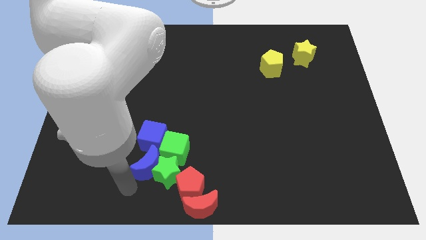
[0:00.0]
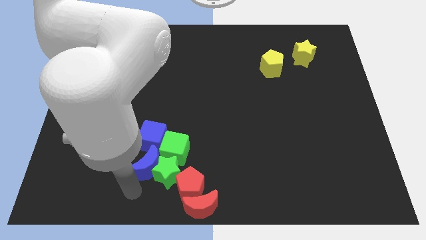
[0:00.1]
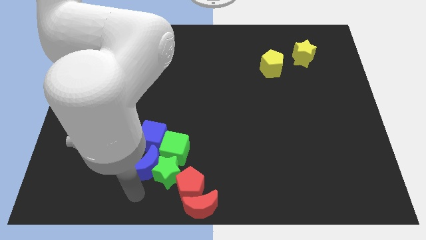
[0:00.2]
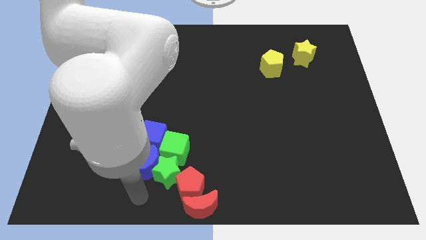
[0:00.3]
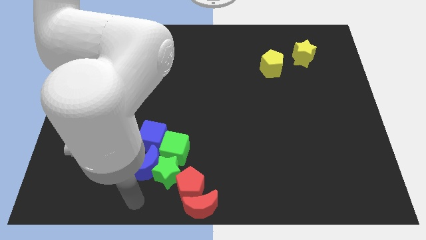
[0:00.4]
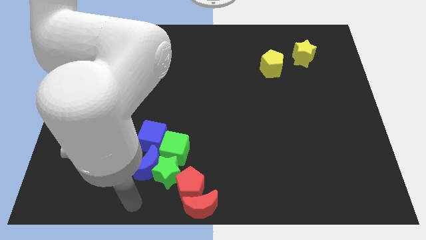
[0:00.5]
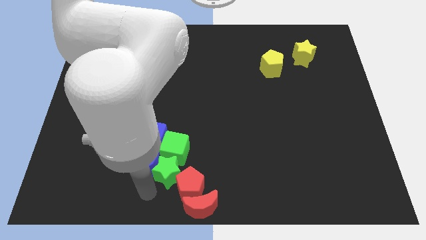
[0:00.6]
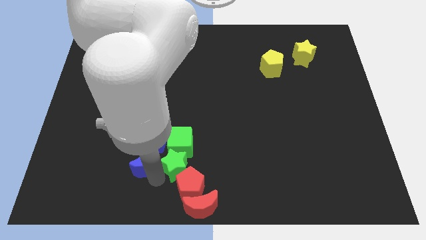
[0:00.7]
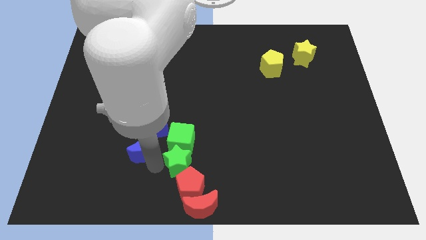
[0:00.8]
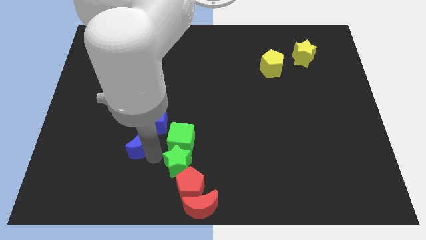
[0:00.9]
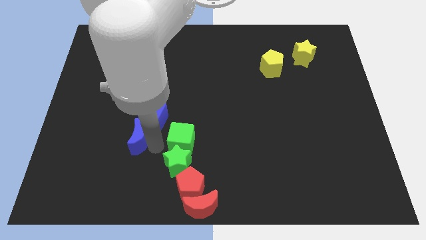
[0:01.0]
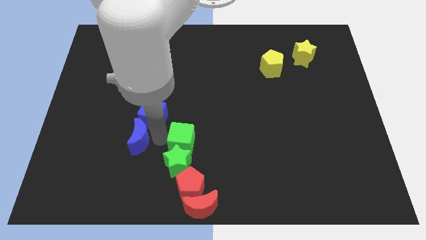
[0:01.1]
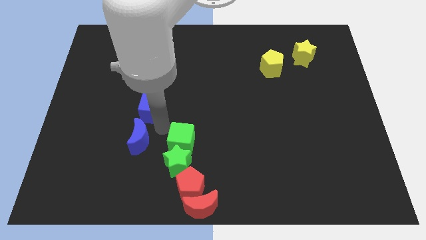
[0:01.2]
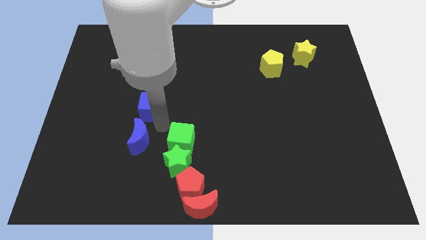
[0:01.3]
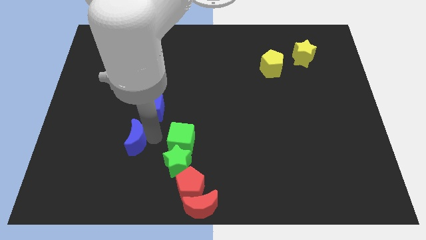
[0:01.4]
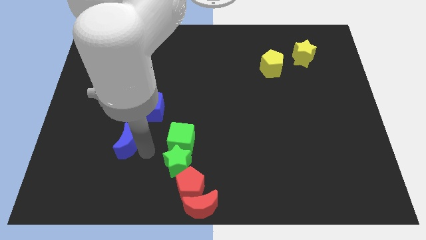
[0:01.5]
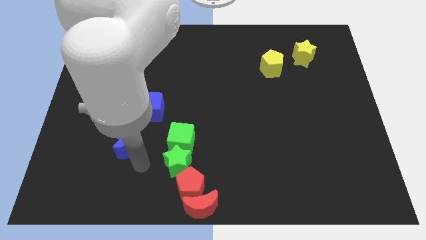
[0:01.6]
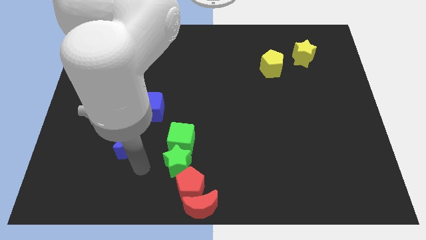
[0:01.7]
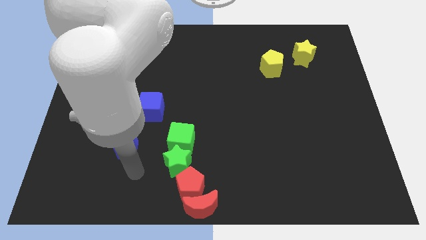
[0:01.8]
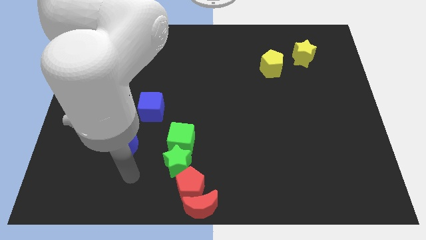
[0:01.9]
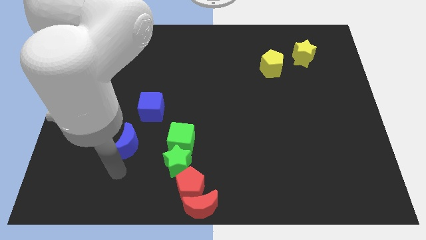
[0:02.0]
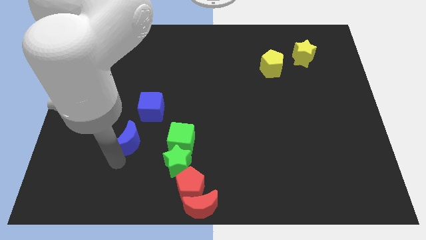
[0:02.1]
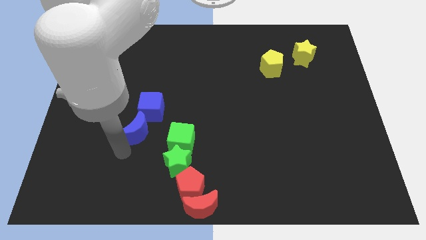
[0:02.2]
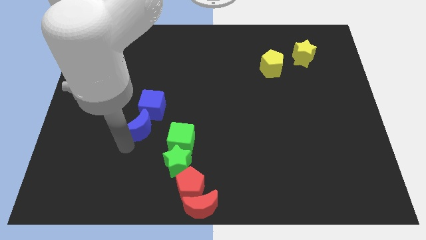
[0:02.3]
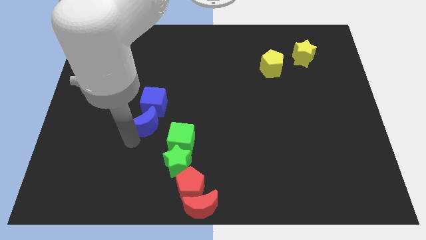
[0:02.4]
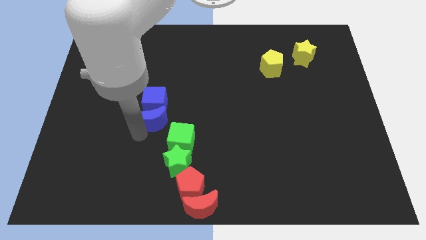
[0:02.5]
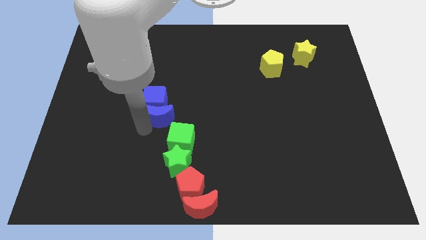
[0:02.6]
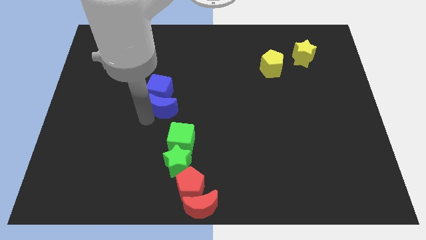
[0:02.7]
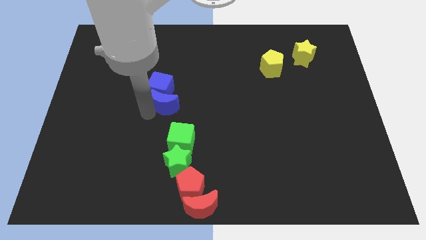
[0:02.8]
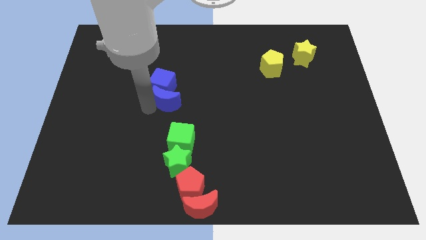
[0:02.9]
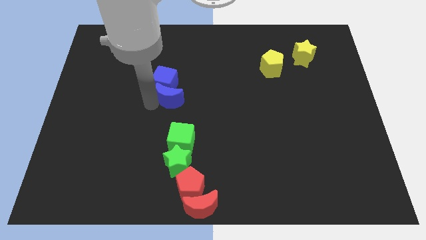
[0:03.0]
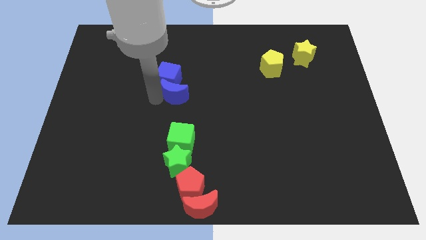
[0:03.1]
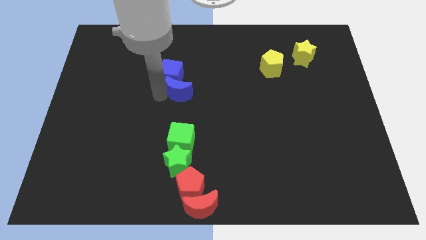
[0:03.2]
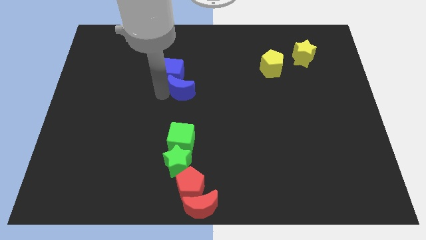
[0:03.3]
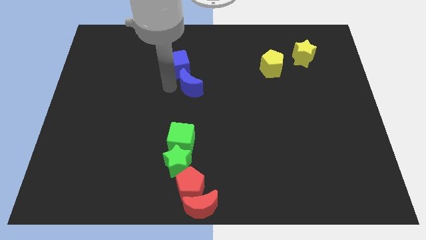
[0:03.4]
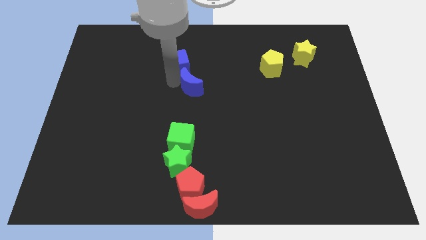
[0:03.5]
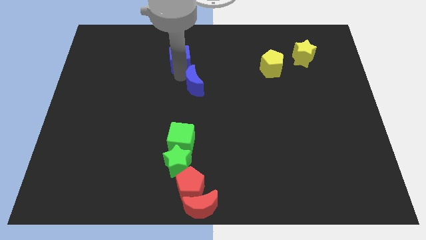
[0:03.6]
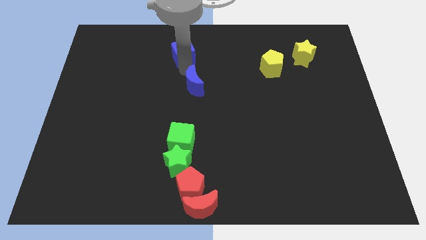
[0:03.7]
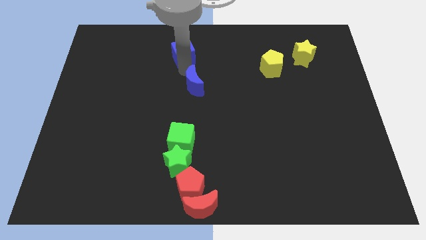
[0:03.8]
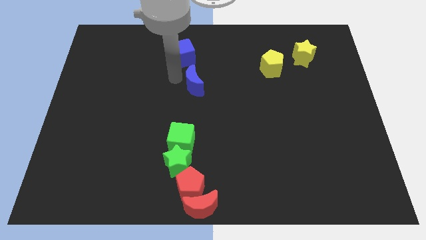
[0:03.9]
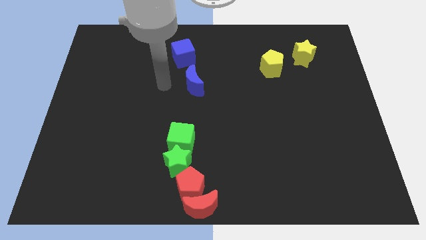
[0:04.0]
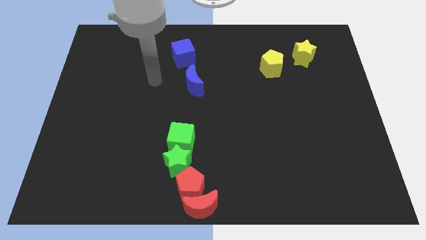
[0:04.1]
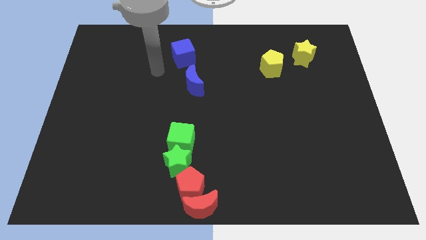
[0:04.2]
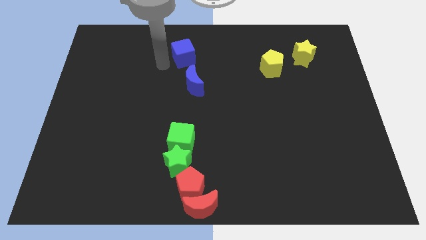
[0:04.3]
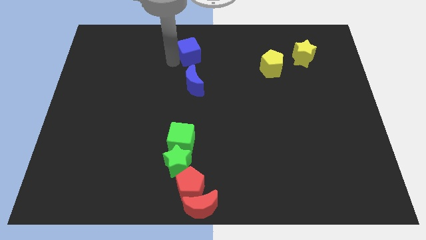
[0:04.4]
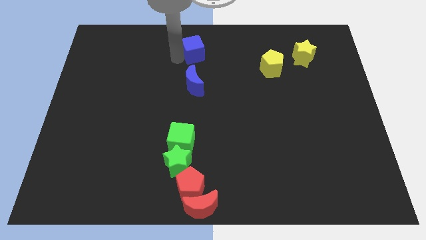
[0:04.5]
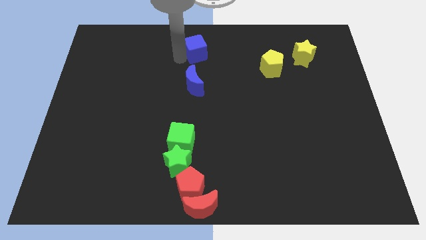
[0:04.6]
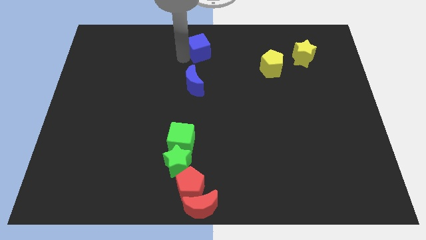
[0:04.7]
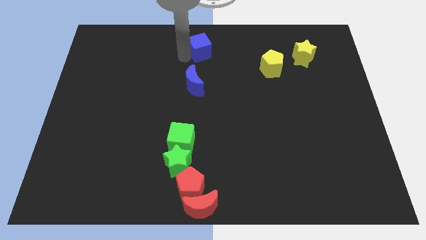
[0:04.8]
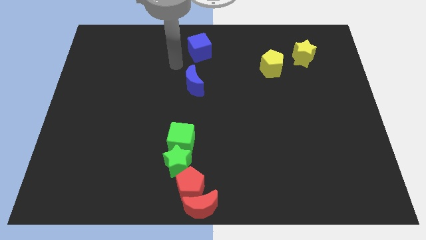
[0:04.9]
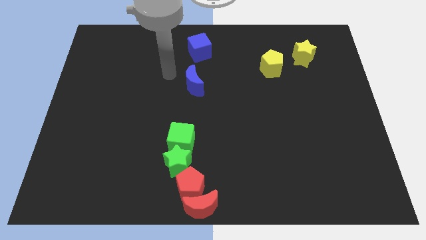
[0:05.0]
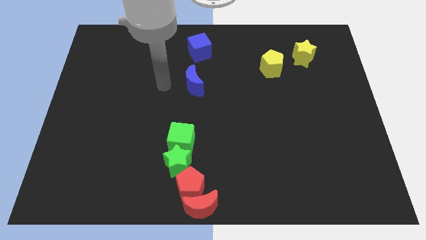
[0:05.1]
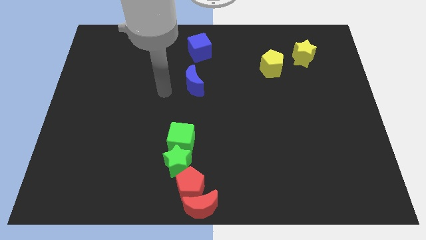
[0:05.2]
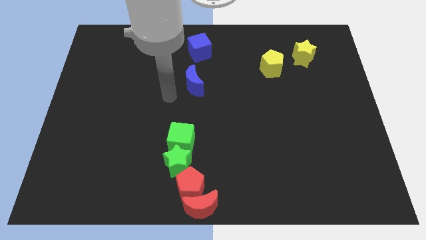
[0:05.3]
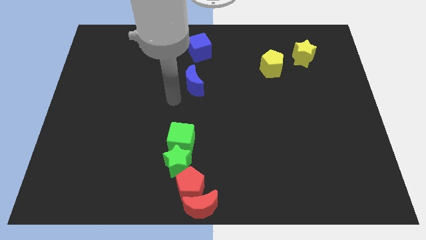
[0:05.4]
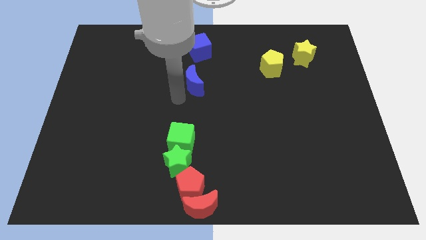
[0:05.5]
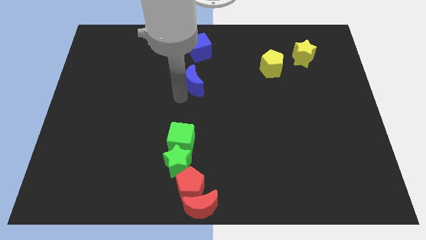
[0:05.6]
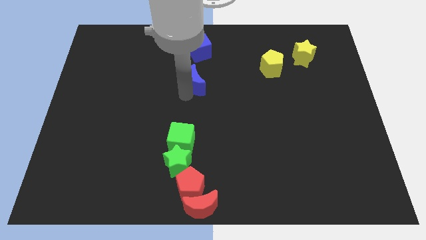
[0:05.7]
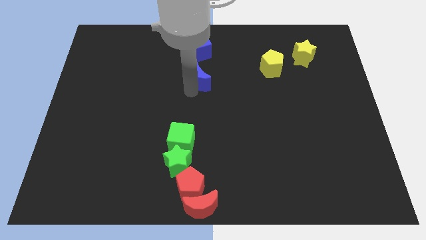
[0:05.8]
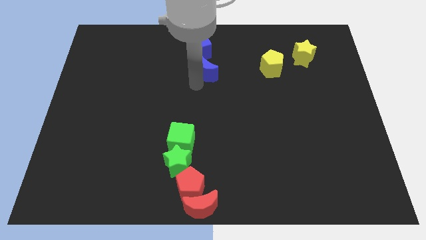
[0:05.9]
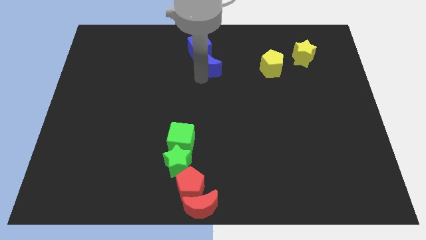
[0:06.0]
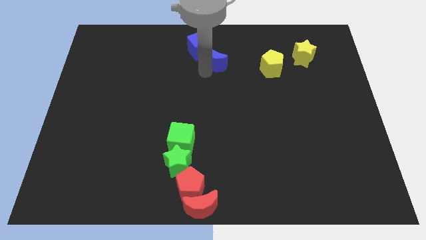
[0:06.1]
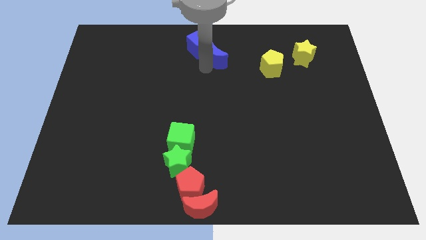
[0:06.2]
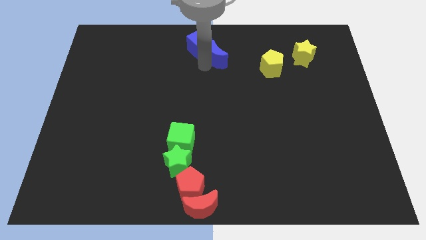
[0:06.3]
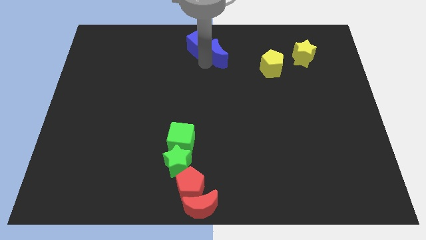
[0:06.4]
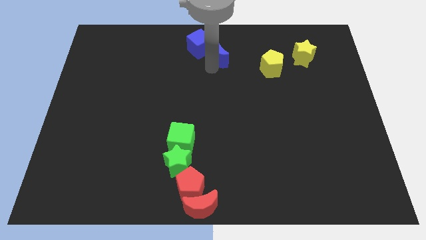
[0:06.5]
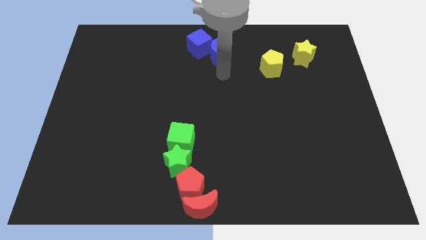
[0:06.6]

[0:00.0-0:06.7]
move the blue cube and blue moon towards top center

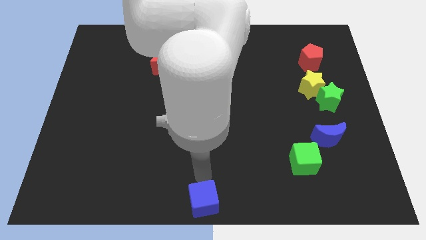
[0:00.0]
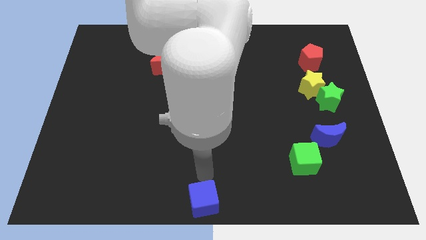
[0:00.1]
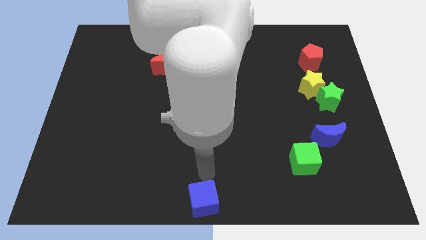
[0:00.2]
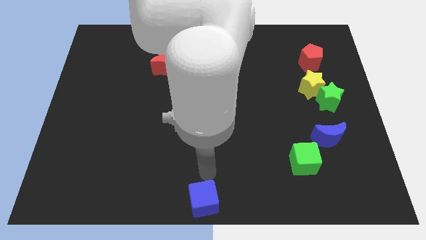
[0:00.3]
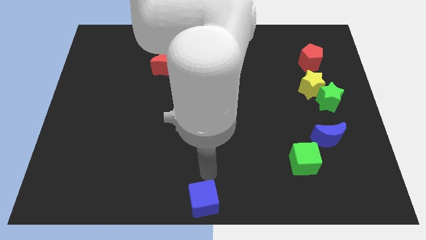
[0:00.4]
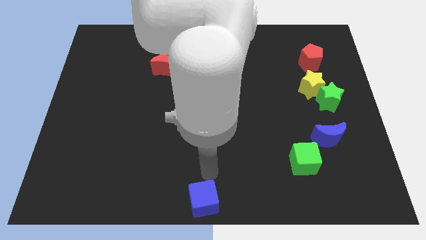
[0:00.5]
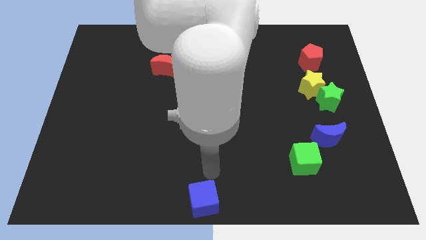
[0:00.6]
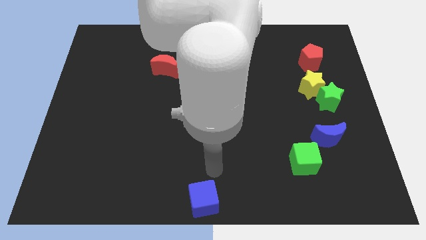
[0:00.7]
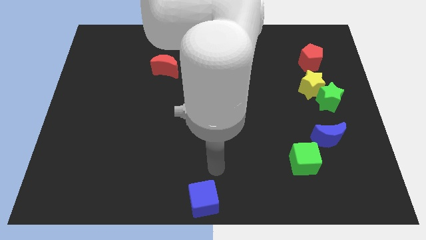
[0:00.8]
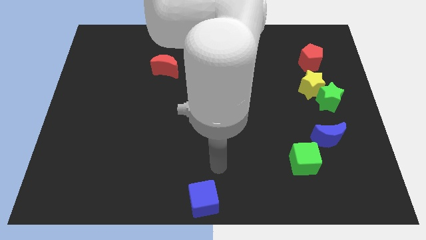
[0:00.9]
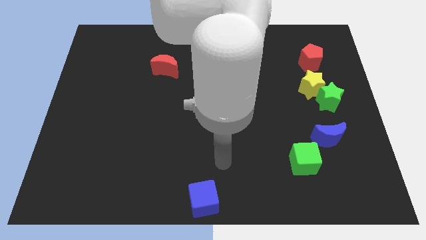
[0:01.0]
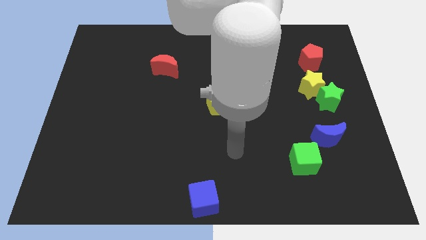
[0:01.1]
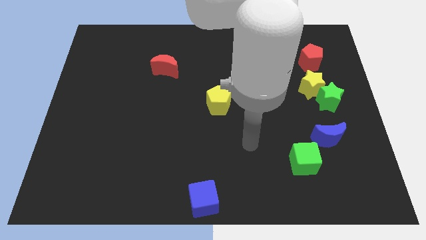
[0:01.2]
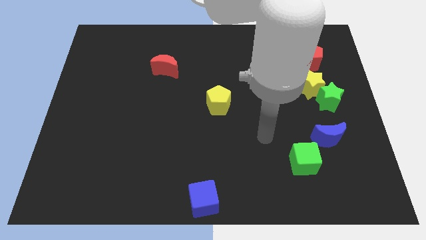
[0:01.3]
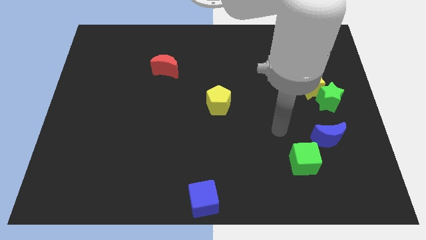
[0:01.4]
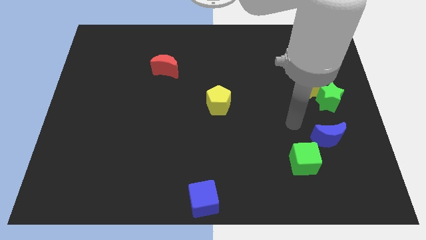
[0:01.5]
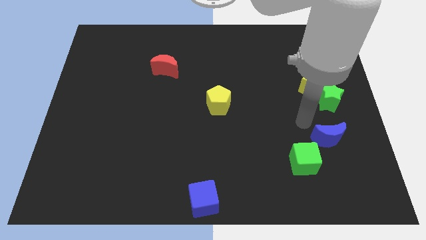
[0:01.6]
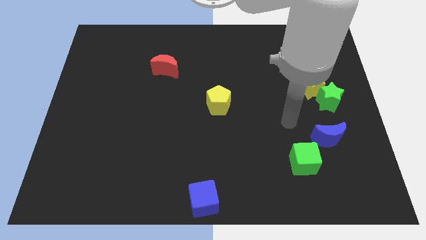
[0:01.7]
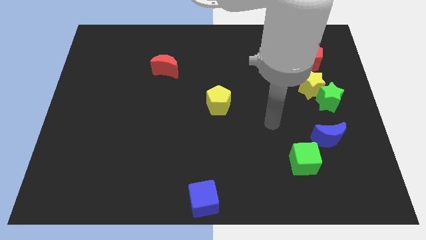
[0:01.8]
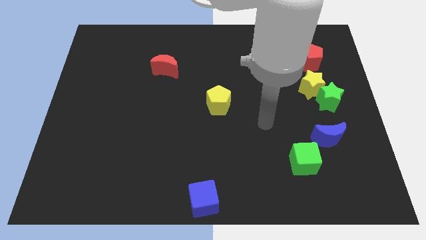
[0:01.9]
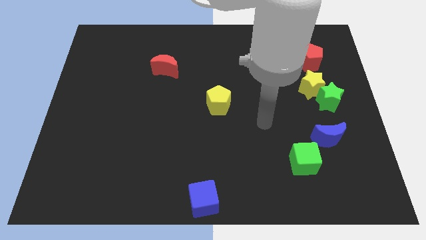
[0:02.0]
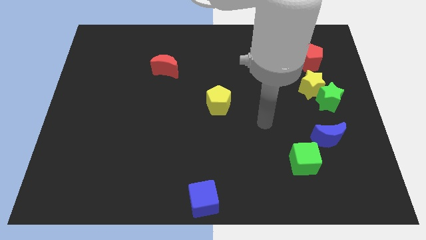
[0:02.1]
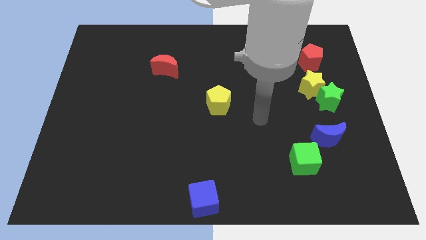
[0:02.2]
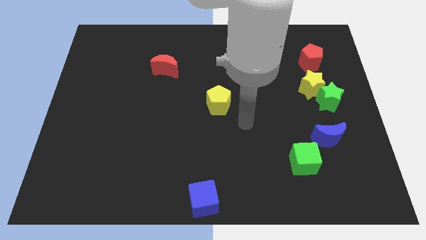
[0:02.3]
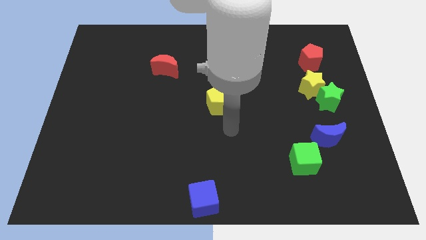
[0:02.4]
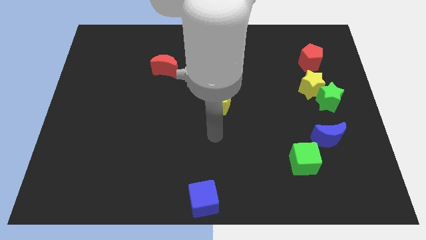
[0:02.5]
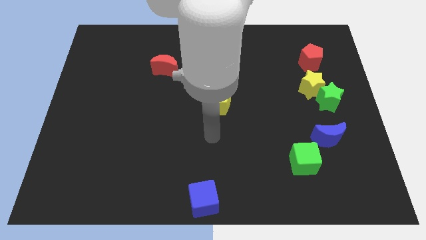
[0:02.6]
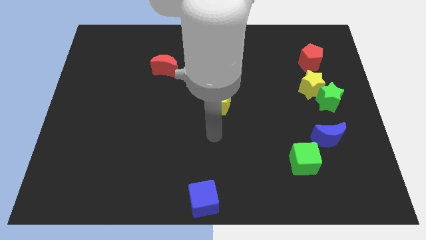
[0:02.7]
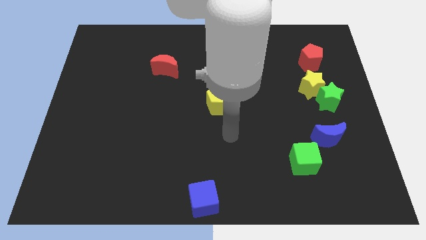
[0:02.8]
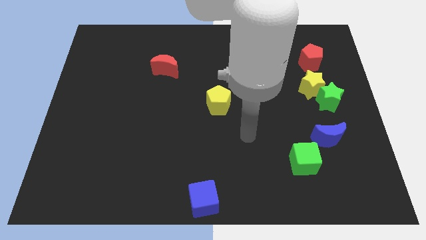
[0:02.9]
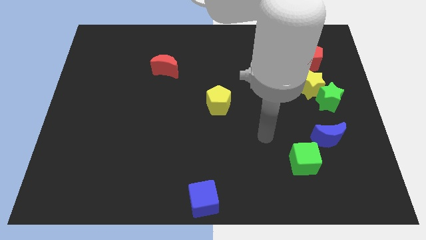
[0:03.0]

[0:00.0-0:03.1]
move your arm away from blue cube
